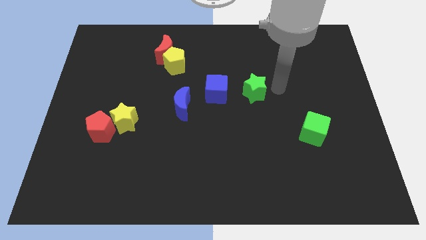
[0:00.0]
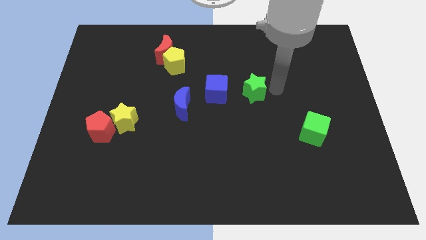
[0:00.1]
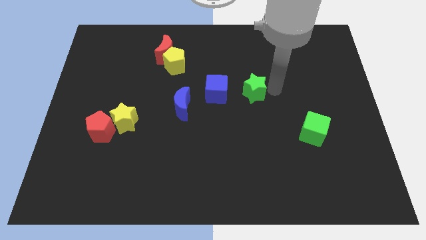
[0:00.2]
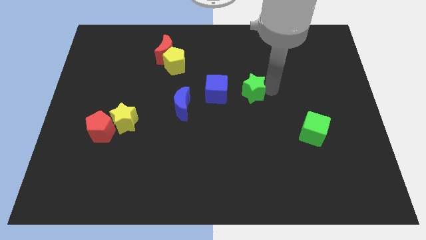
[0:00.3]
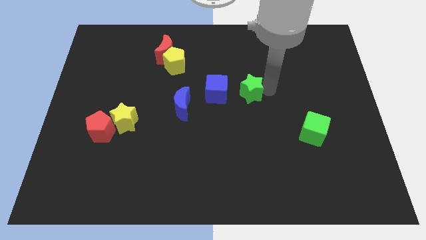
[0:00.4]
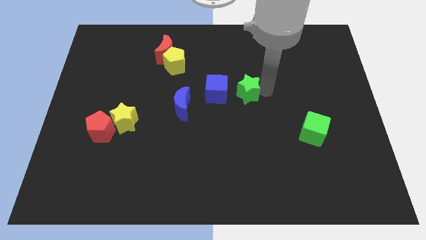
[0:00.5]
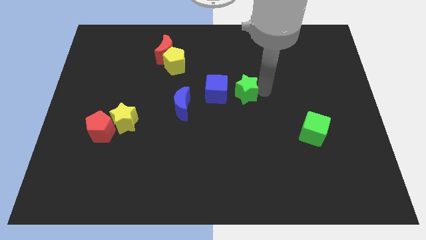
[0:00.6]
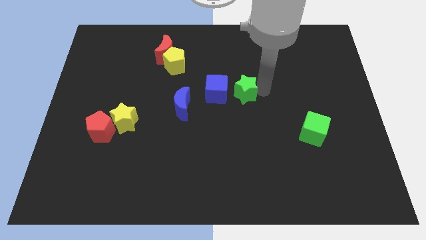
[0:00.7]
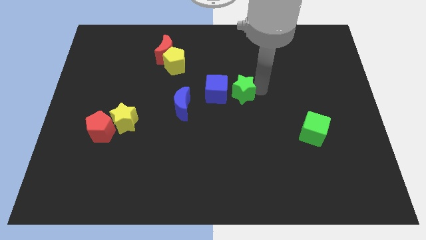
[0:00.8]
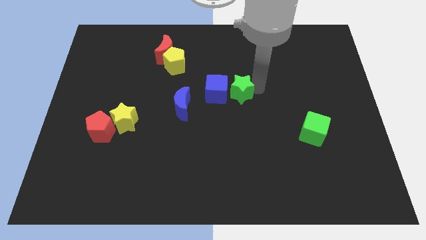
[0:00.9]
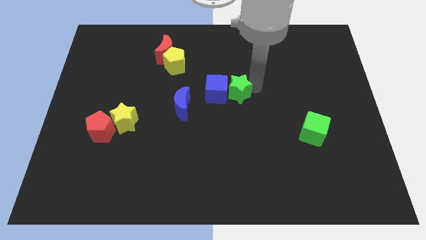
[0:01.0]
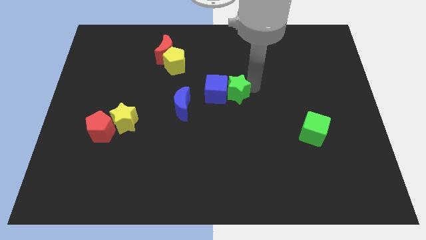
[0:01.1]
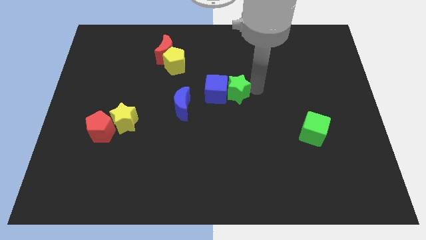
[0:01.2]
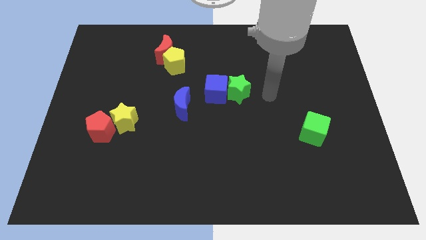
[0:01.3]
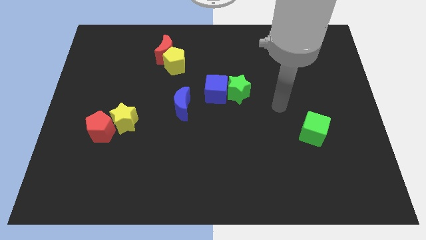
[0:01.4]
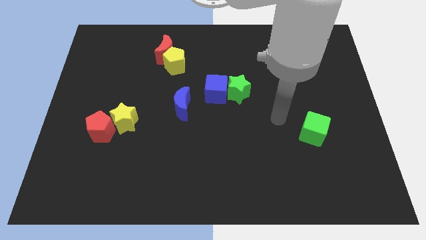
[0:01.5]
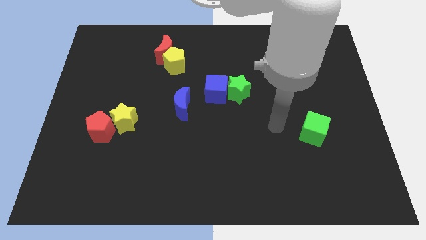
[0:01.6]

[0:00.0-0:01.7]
place the green star to the right of the blue cube

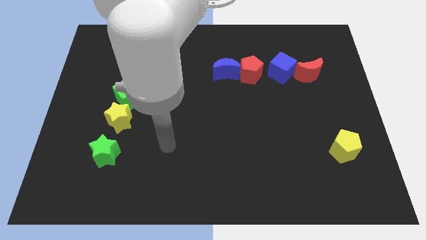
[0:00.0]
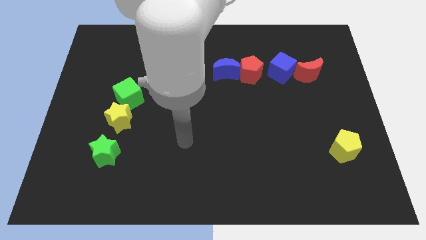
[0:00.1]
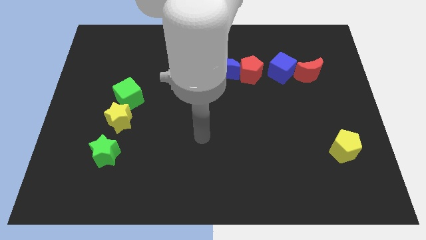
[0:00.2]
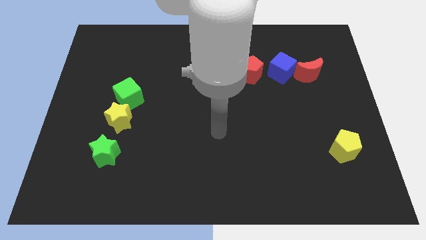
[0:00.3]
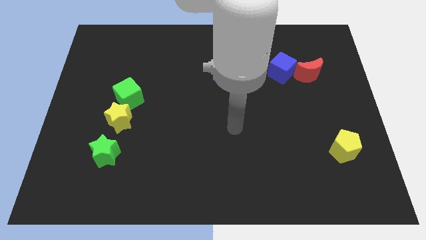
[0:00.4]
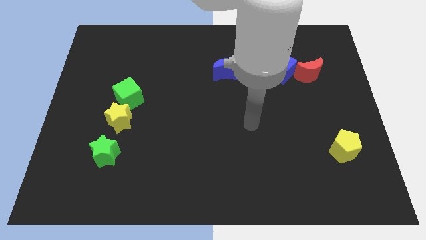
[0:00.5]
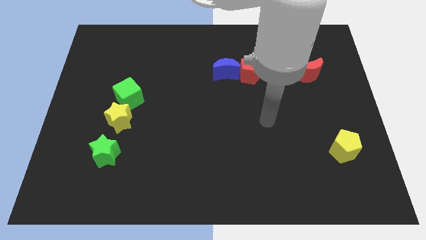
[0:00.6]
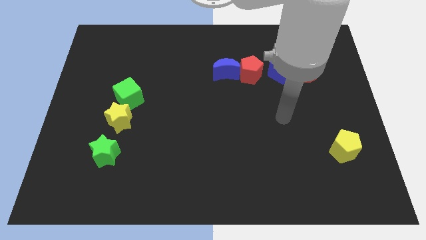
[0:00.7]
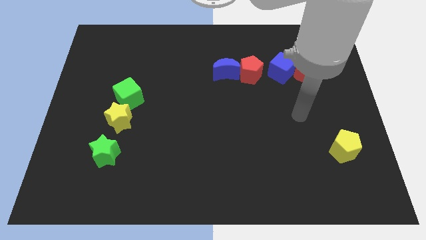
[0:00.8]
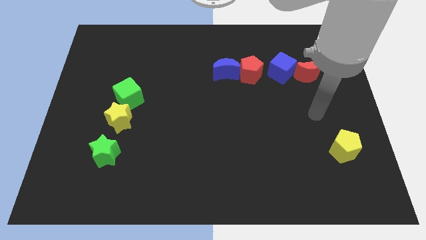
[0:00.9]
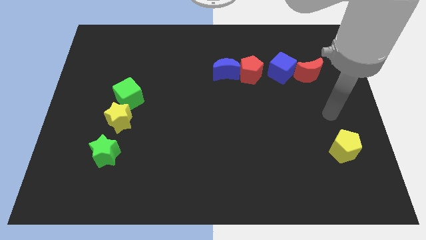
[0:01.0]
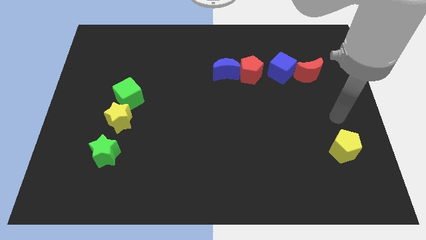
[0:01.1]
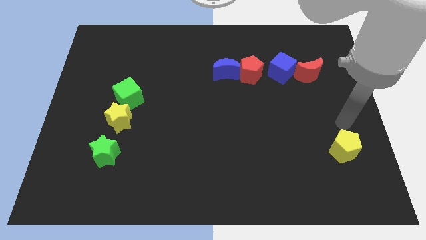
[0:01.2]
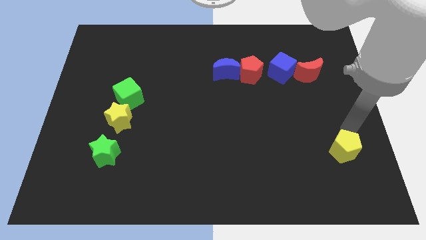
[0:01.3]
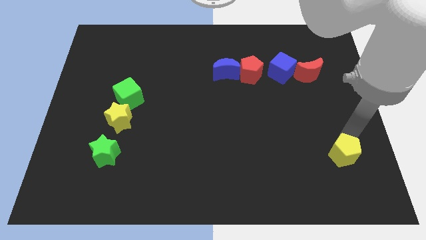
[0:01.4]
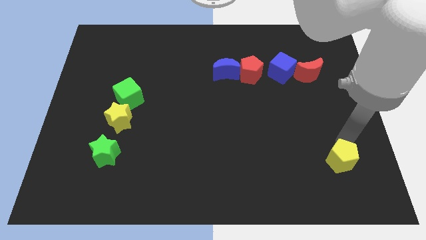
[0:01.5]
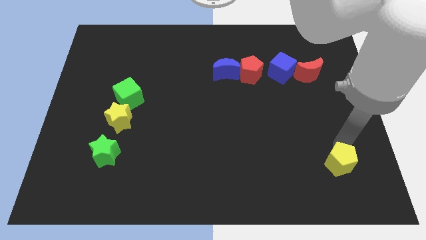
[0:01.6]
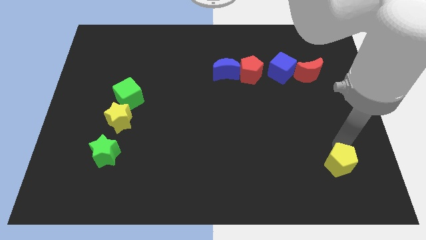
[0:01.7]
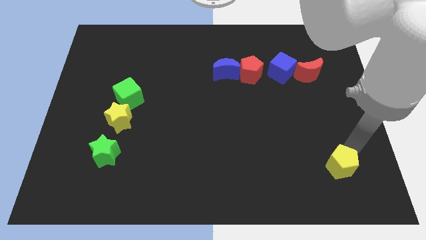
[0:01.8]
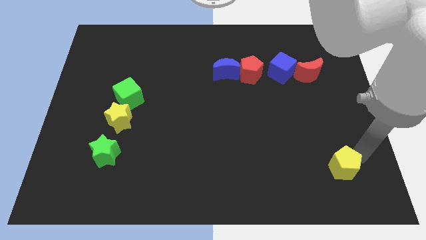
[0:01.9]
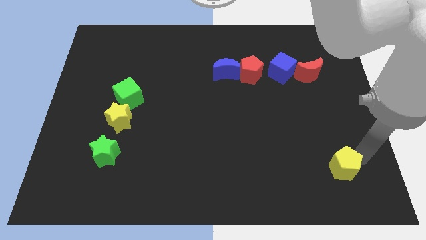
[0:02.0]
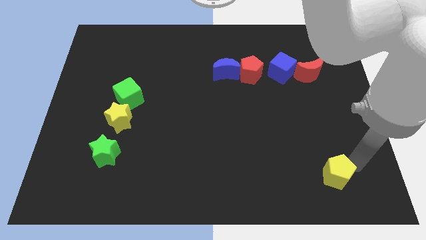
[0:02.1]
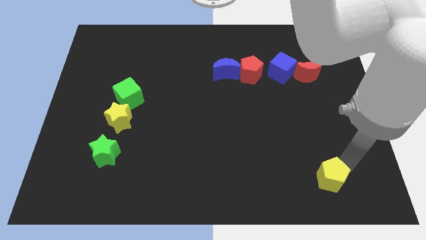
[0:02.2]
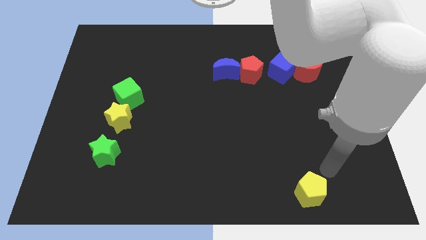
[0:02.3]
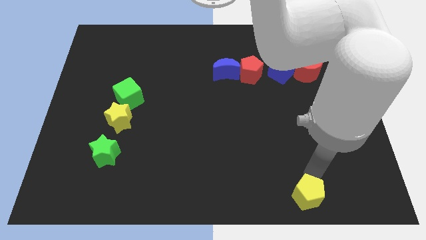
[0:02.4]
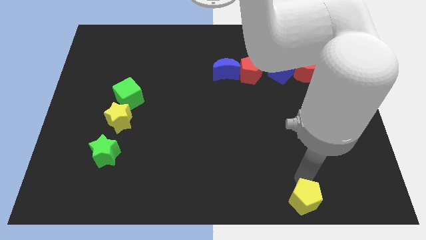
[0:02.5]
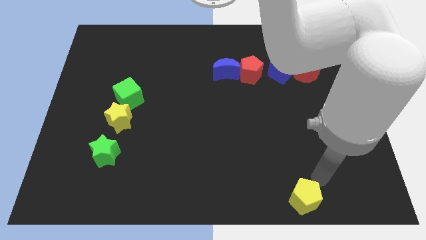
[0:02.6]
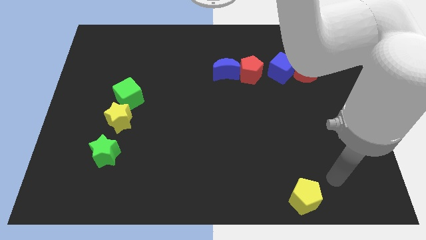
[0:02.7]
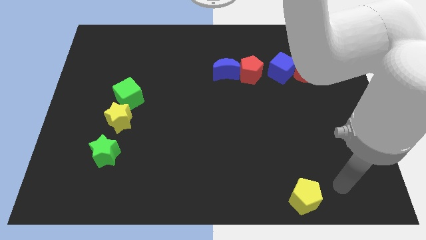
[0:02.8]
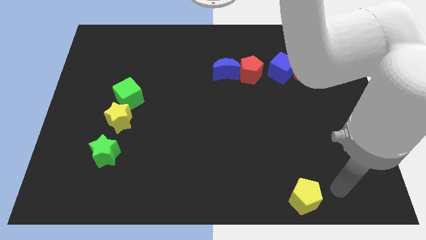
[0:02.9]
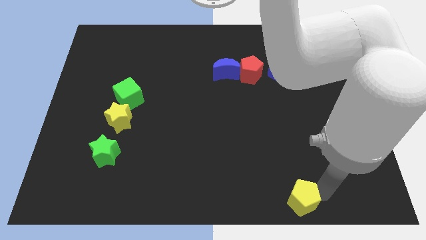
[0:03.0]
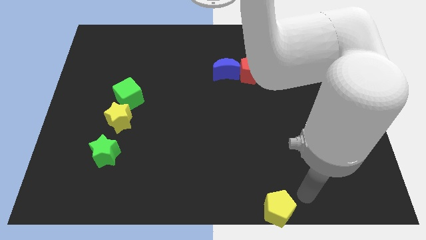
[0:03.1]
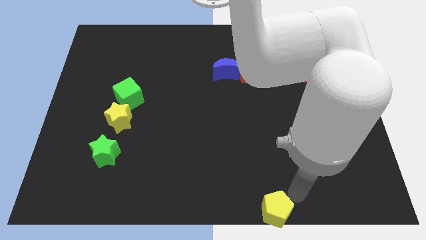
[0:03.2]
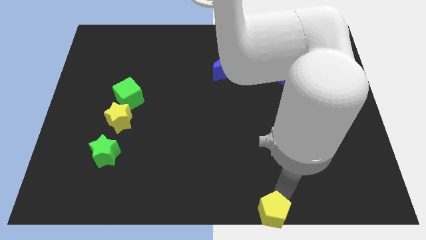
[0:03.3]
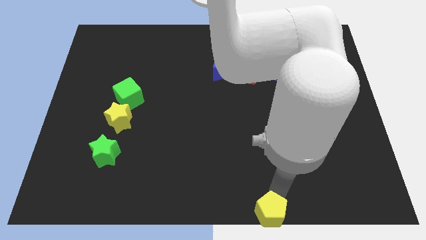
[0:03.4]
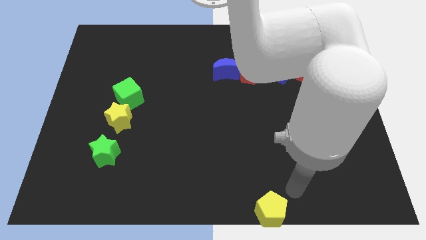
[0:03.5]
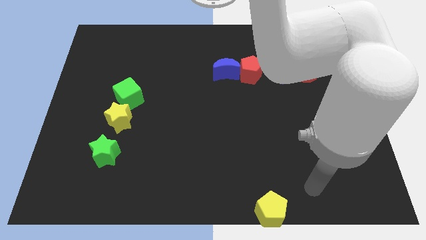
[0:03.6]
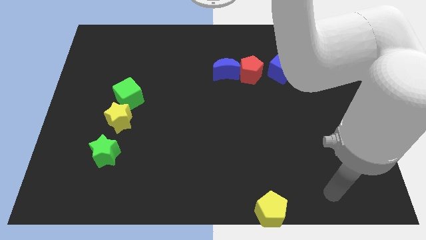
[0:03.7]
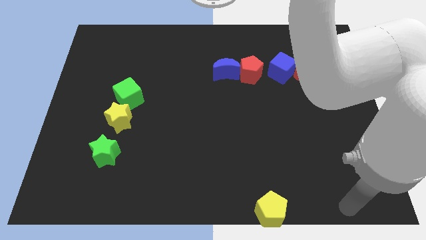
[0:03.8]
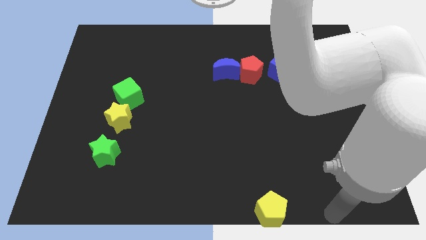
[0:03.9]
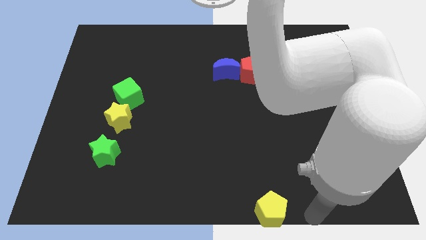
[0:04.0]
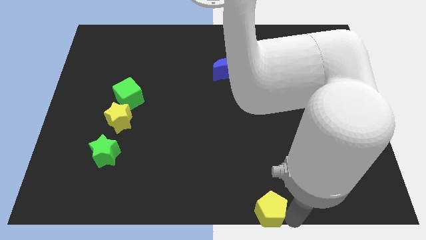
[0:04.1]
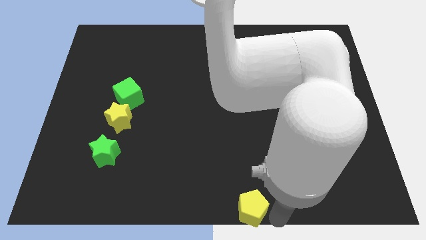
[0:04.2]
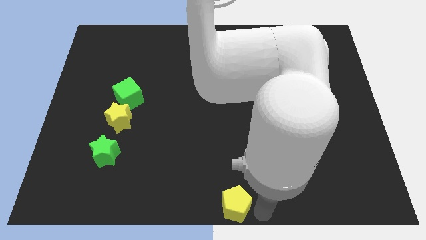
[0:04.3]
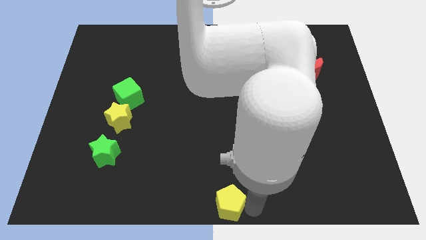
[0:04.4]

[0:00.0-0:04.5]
move the yellow pentagon into the bottom center of the board

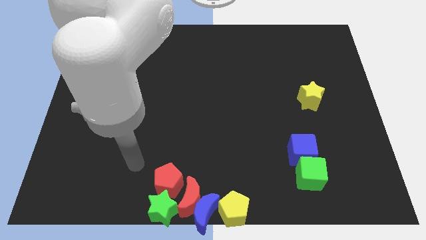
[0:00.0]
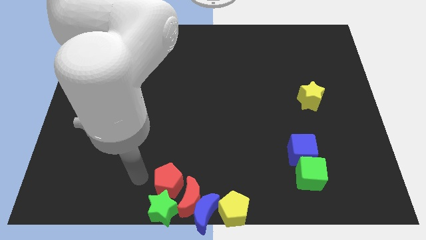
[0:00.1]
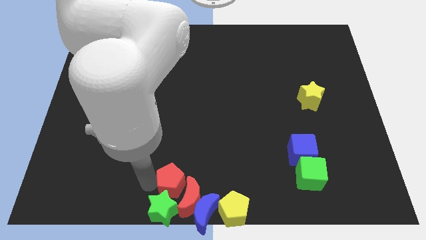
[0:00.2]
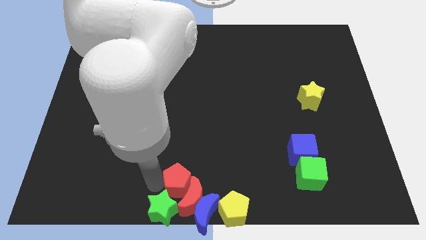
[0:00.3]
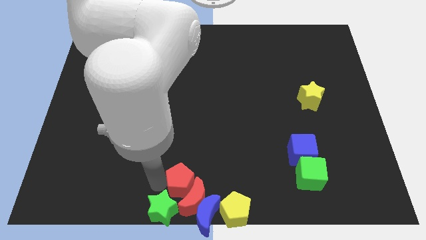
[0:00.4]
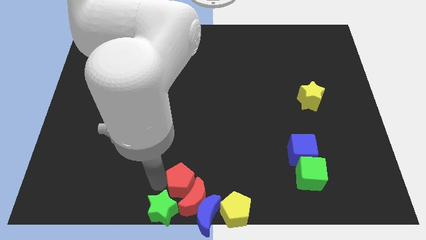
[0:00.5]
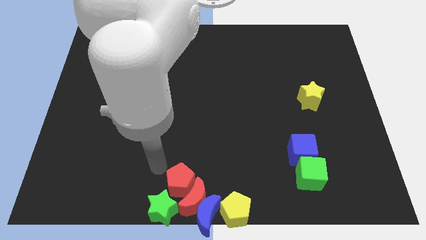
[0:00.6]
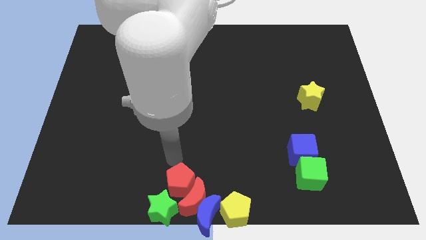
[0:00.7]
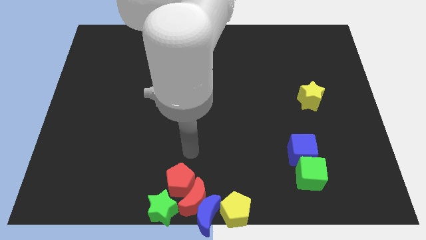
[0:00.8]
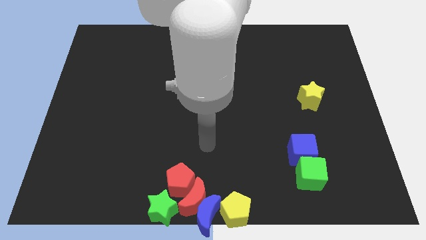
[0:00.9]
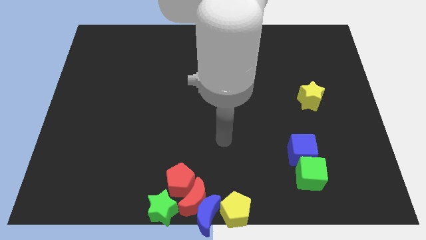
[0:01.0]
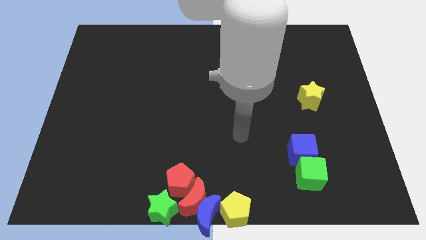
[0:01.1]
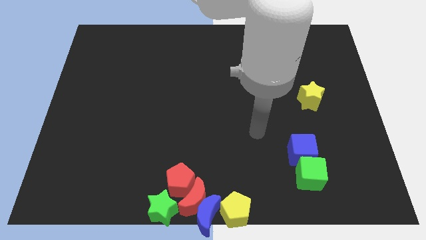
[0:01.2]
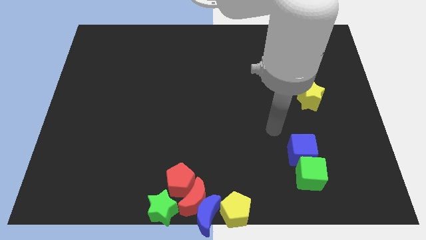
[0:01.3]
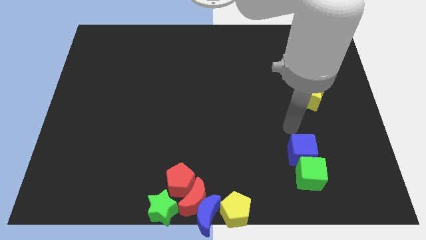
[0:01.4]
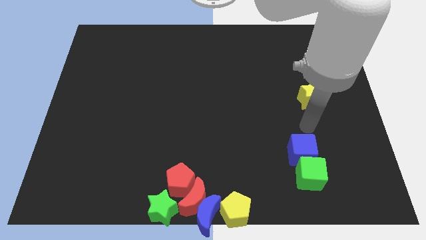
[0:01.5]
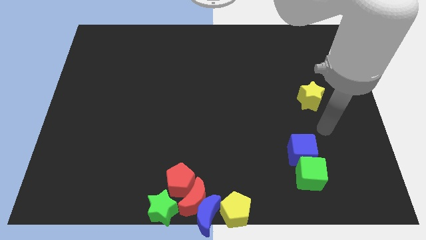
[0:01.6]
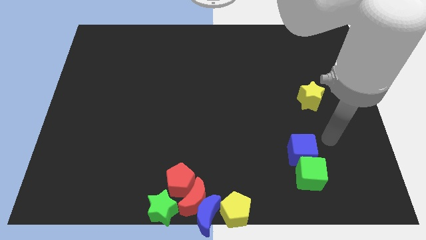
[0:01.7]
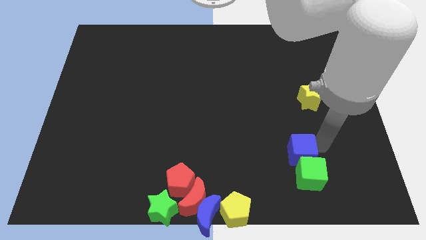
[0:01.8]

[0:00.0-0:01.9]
move the arm towards the blue cube

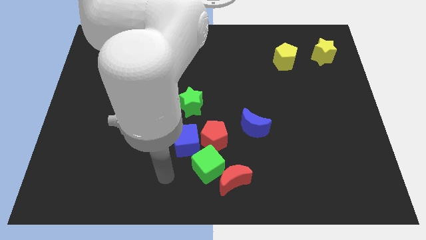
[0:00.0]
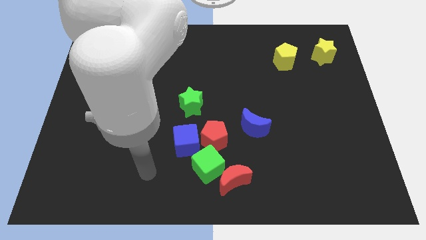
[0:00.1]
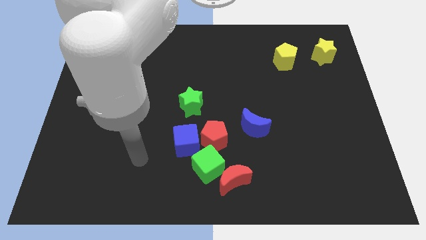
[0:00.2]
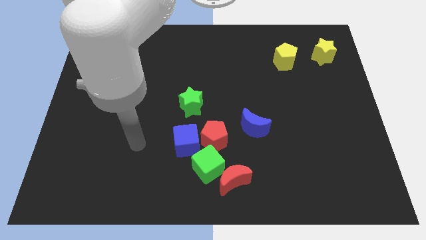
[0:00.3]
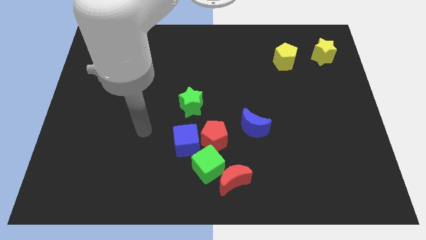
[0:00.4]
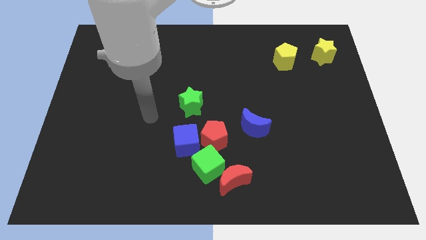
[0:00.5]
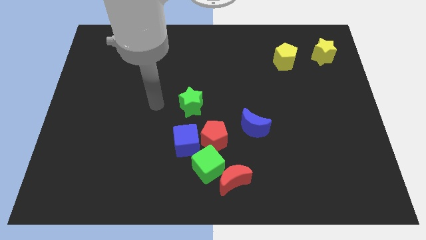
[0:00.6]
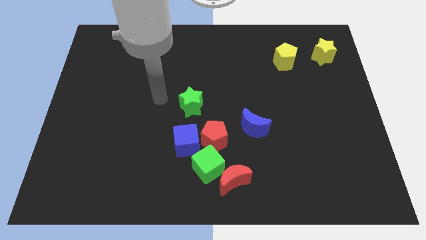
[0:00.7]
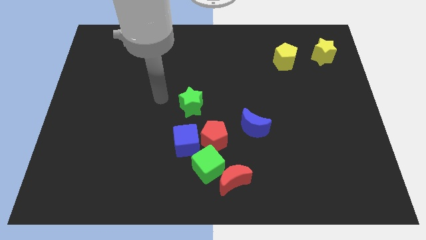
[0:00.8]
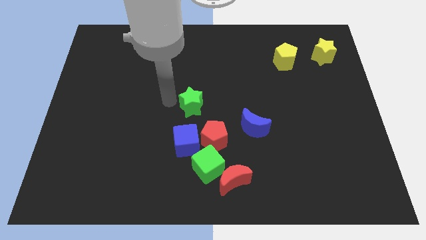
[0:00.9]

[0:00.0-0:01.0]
place the arm left to the green star
